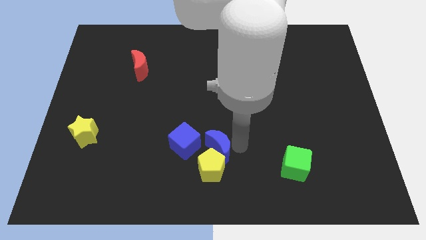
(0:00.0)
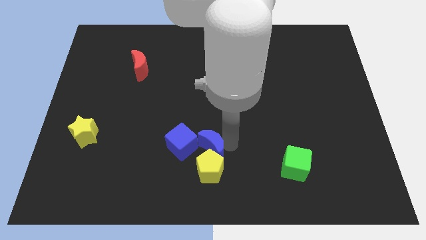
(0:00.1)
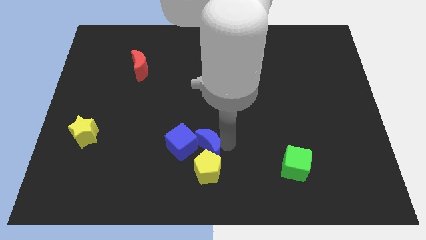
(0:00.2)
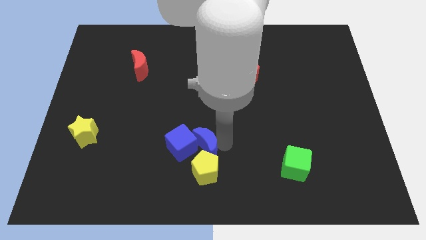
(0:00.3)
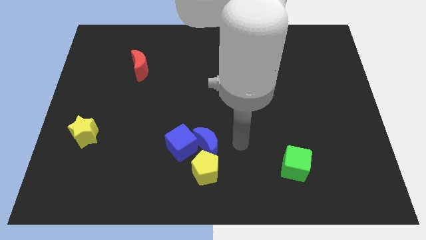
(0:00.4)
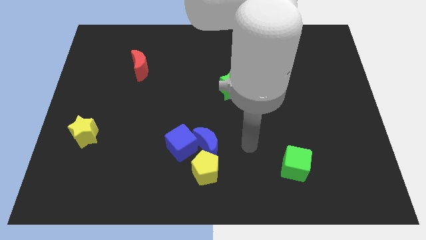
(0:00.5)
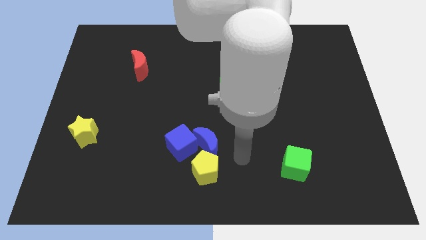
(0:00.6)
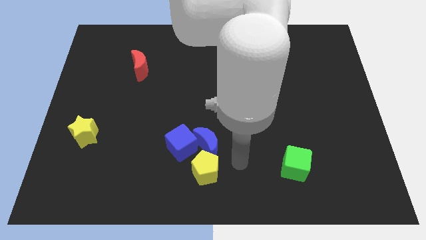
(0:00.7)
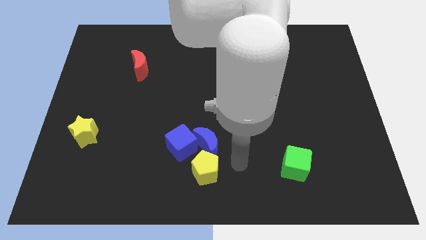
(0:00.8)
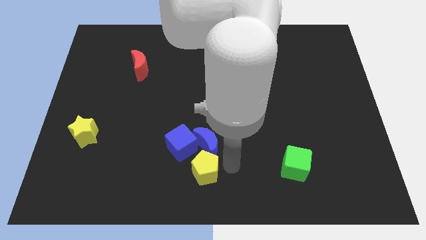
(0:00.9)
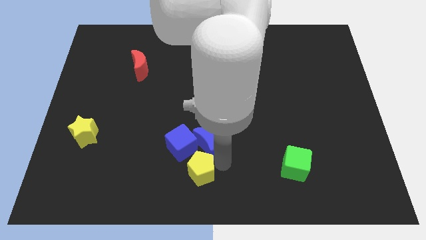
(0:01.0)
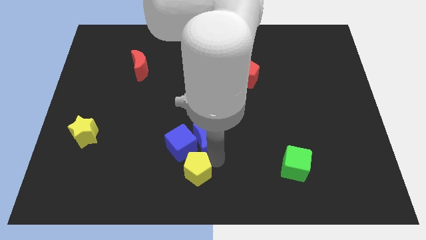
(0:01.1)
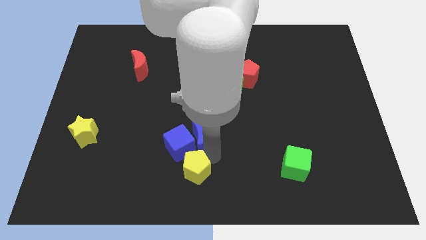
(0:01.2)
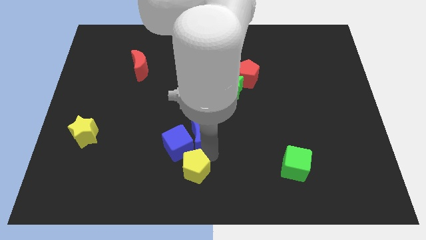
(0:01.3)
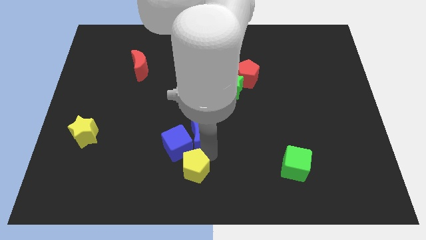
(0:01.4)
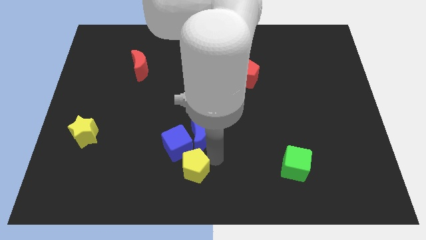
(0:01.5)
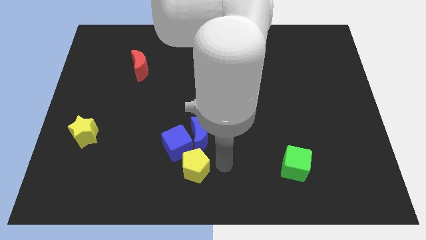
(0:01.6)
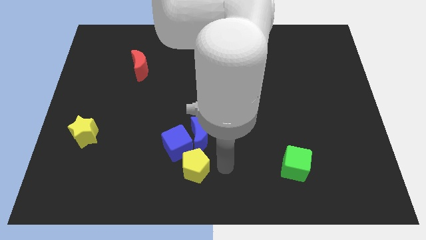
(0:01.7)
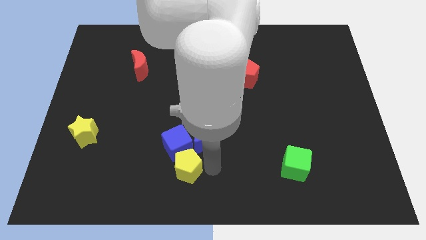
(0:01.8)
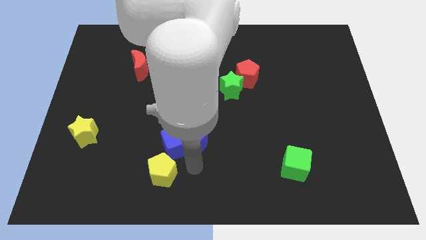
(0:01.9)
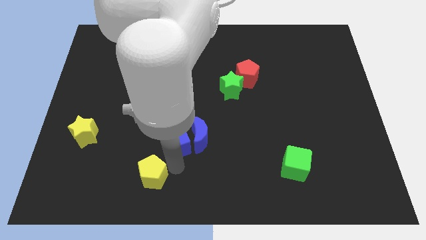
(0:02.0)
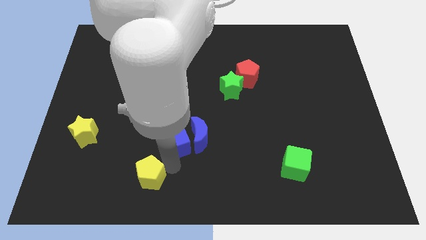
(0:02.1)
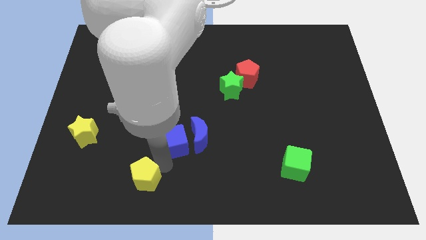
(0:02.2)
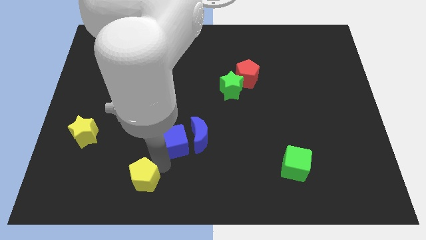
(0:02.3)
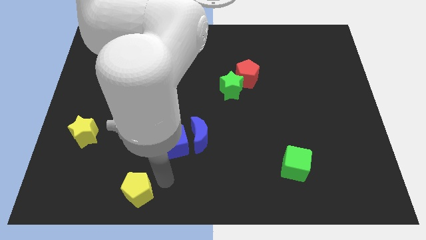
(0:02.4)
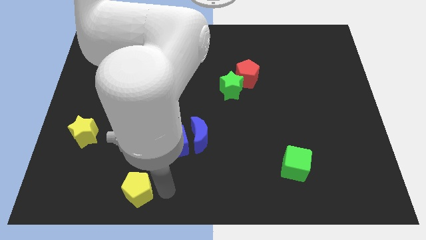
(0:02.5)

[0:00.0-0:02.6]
separate the blue moon and yellow pentagon

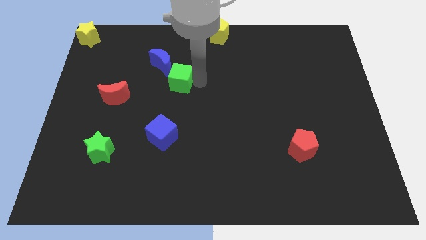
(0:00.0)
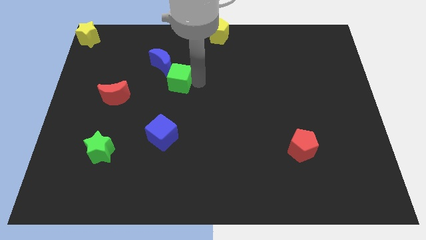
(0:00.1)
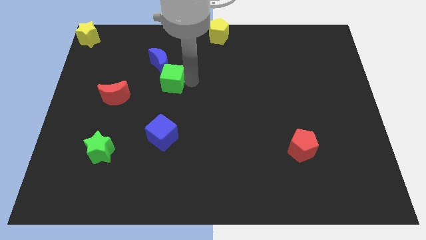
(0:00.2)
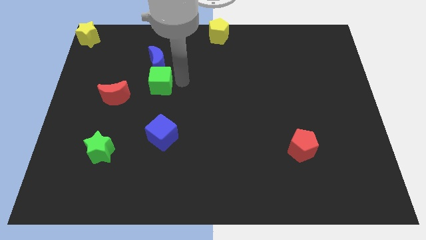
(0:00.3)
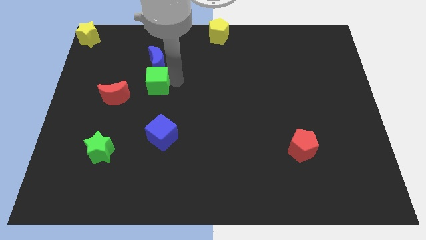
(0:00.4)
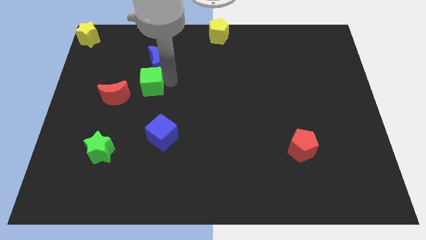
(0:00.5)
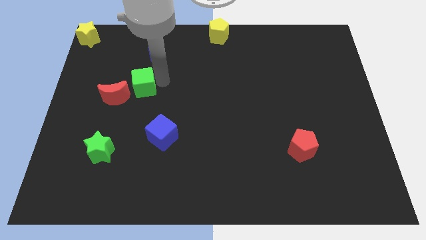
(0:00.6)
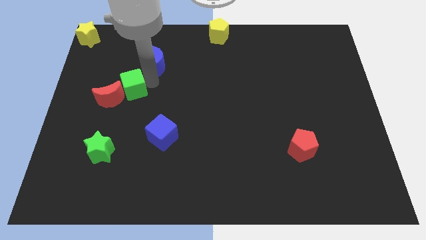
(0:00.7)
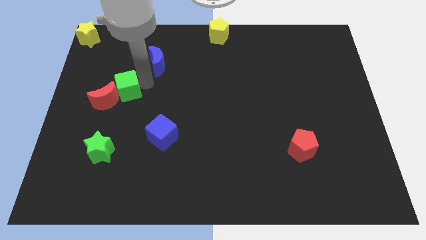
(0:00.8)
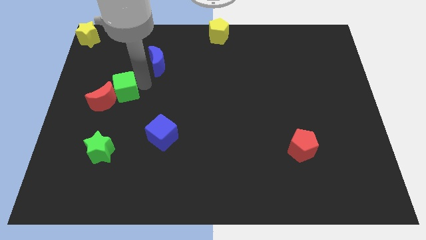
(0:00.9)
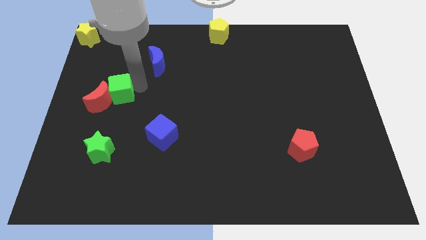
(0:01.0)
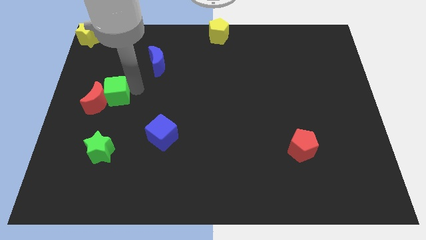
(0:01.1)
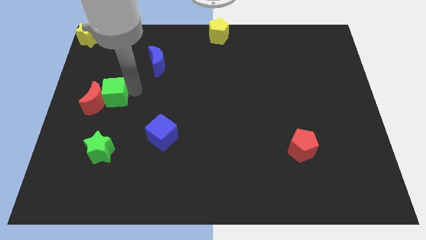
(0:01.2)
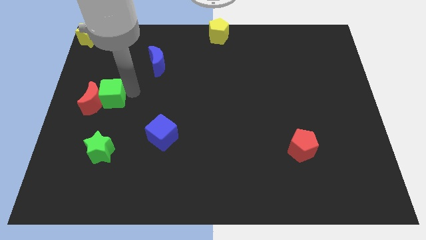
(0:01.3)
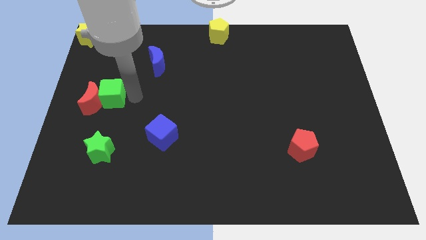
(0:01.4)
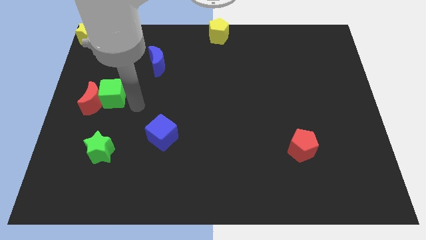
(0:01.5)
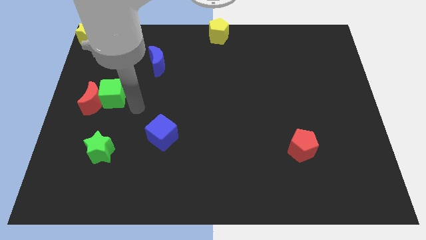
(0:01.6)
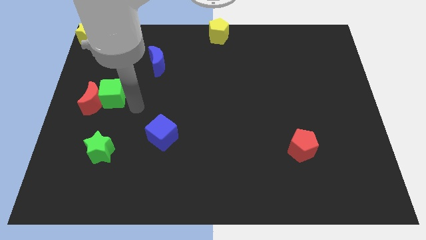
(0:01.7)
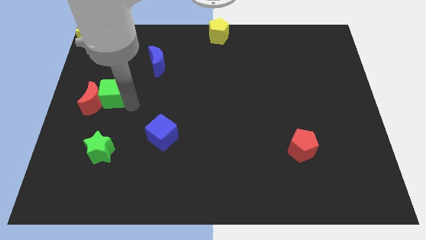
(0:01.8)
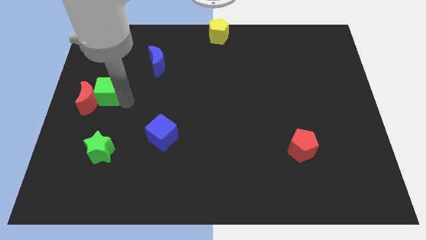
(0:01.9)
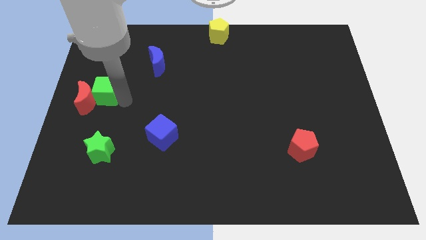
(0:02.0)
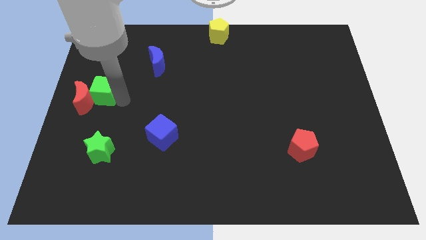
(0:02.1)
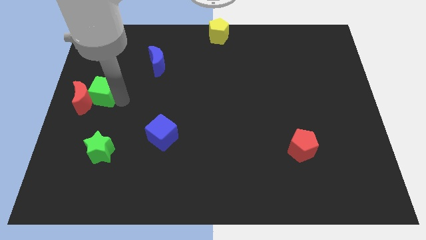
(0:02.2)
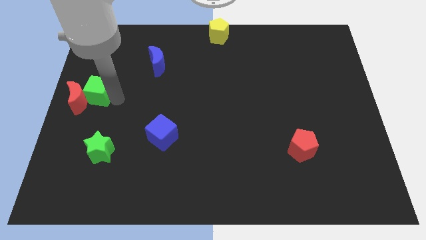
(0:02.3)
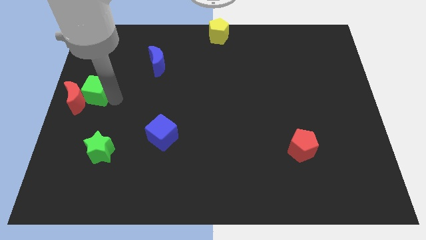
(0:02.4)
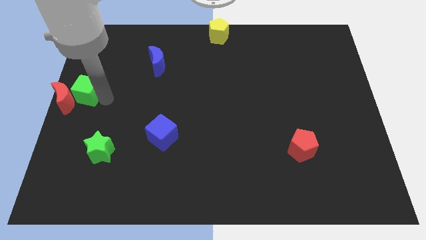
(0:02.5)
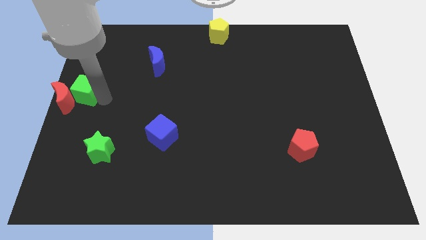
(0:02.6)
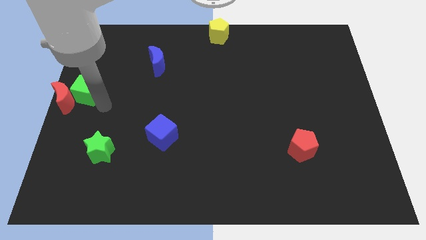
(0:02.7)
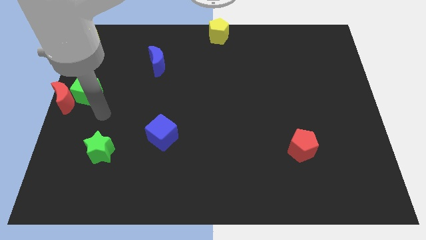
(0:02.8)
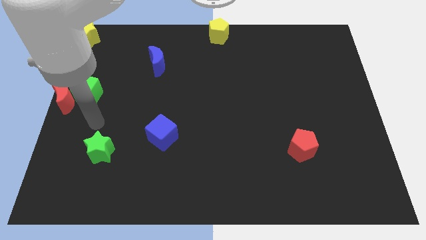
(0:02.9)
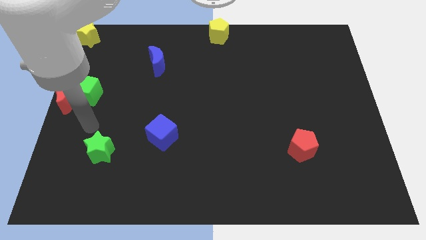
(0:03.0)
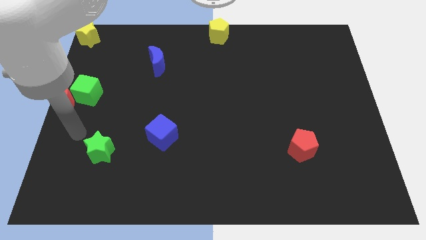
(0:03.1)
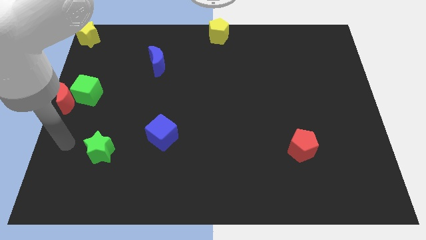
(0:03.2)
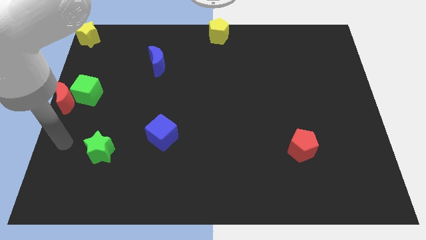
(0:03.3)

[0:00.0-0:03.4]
move the green cube to the right of the red crescent

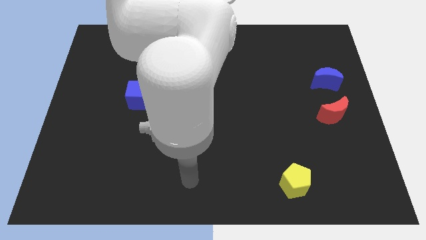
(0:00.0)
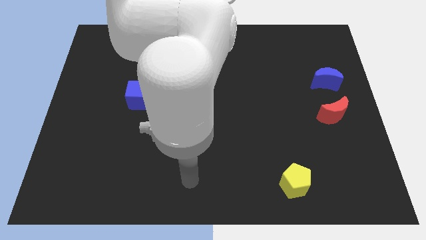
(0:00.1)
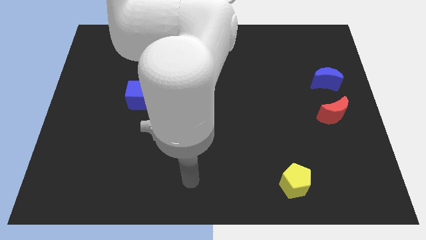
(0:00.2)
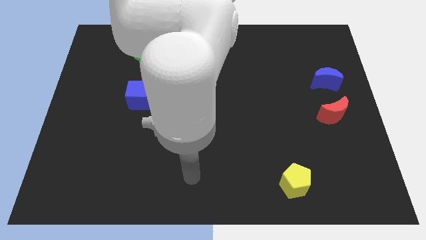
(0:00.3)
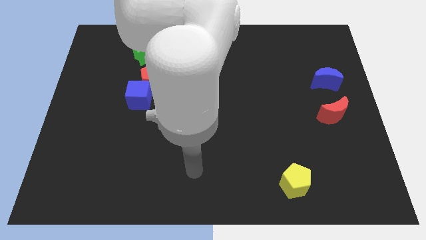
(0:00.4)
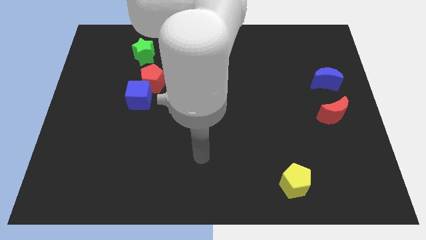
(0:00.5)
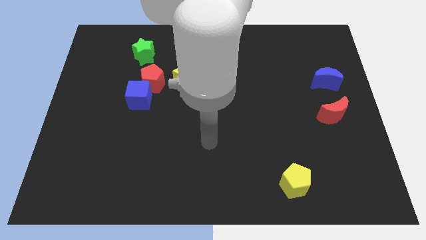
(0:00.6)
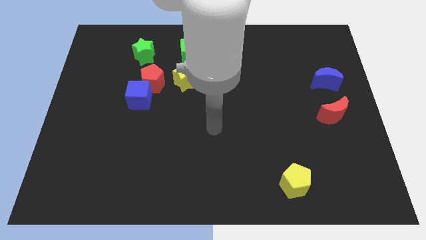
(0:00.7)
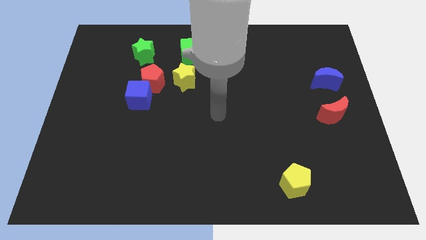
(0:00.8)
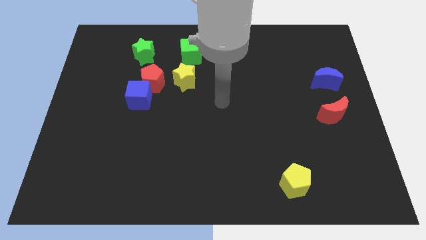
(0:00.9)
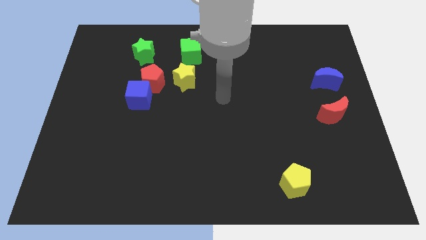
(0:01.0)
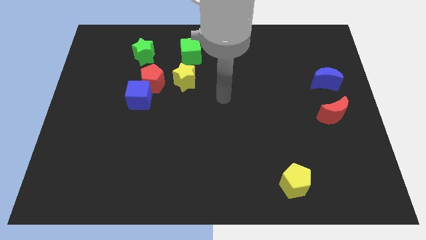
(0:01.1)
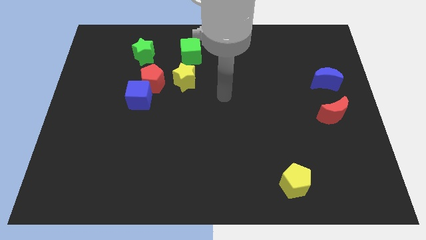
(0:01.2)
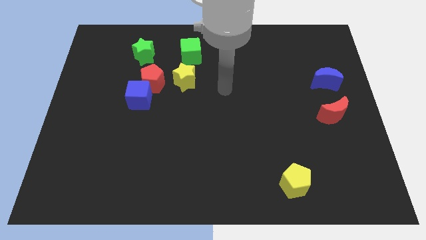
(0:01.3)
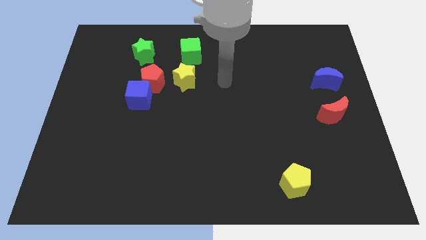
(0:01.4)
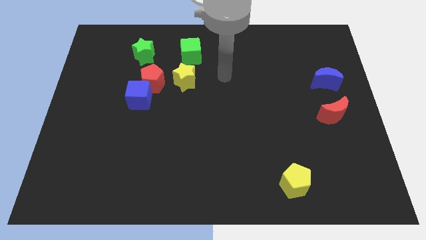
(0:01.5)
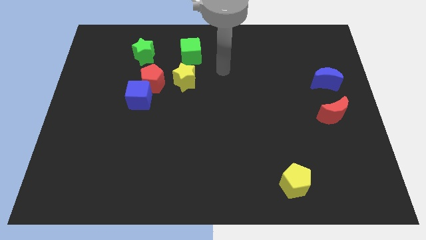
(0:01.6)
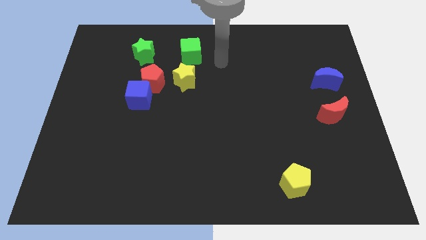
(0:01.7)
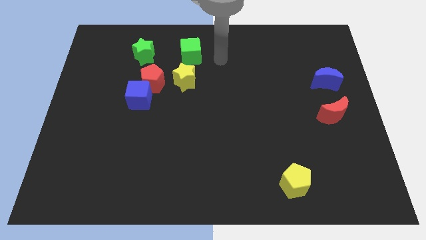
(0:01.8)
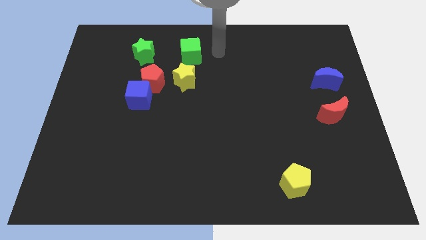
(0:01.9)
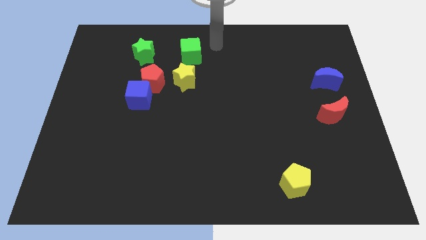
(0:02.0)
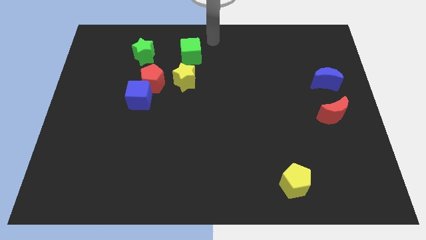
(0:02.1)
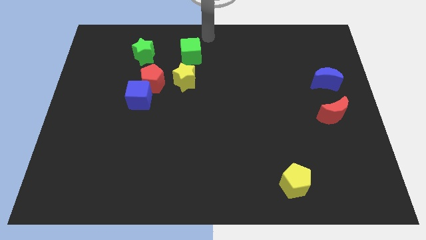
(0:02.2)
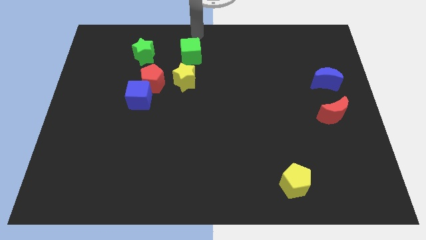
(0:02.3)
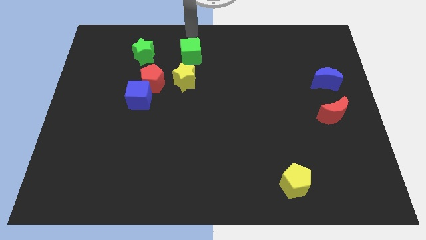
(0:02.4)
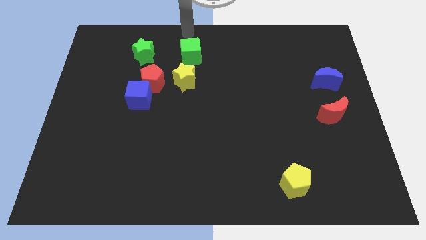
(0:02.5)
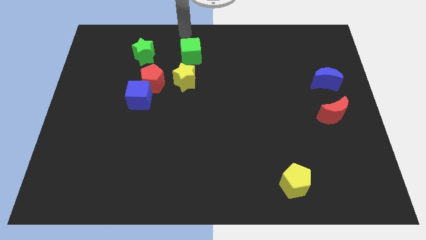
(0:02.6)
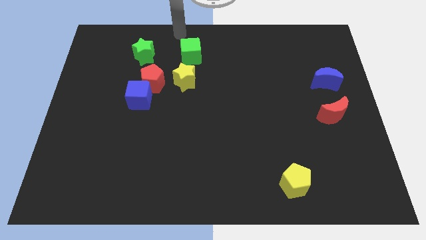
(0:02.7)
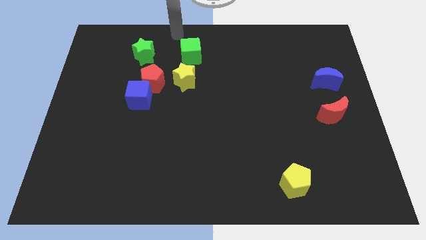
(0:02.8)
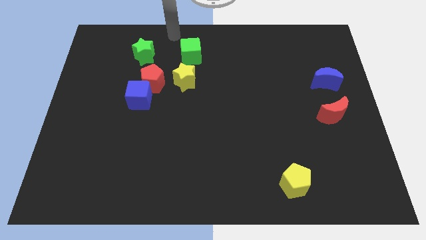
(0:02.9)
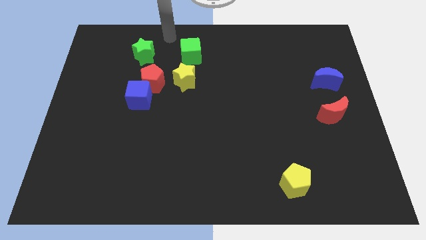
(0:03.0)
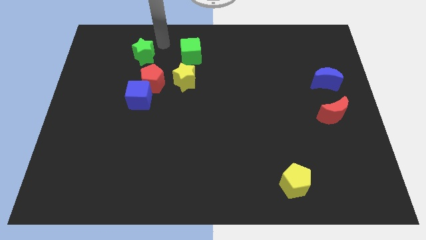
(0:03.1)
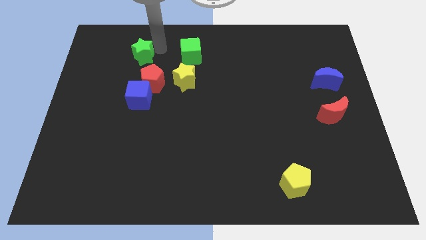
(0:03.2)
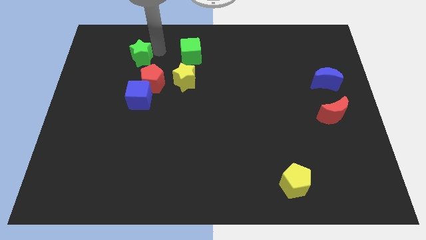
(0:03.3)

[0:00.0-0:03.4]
tap the green star
